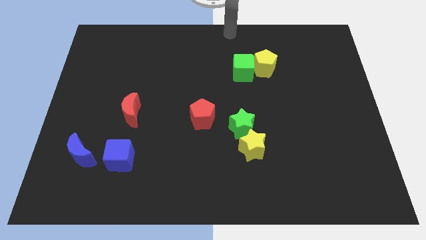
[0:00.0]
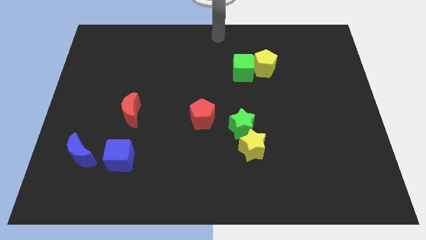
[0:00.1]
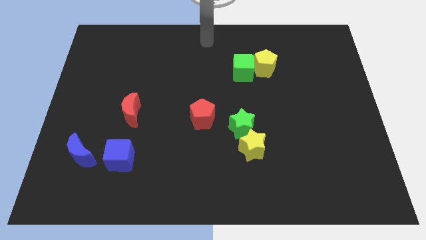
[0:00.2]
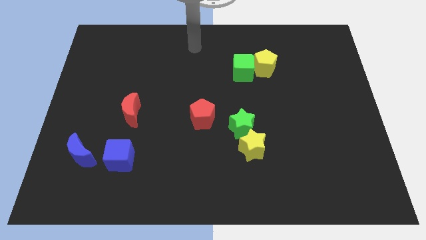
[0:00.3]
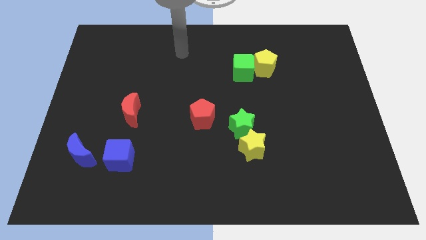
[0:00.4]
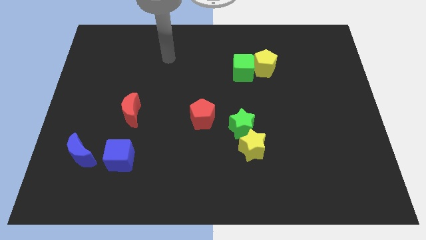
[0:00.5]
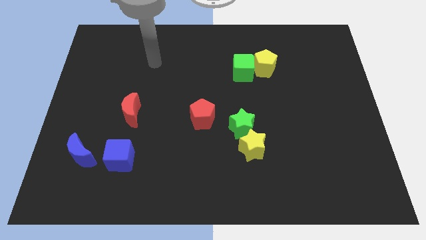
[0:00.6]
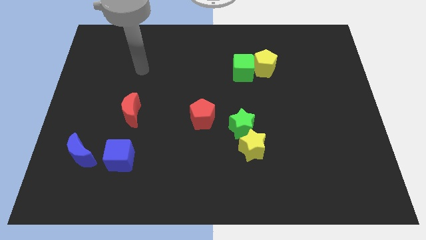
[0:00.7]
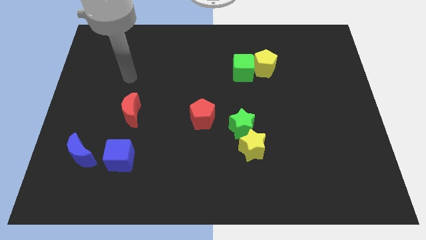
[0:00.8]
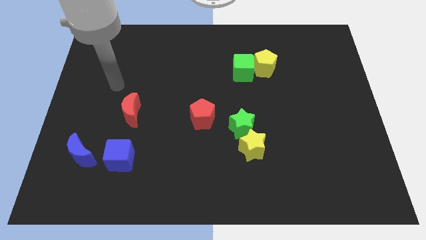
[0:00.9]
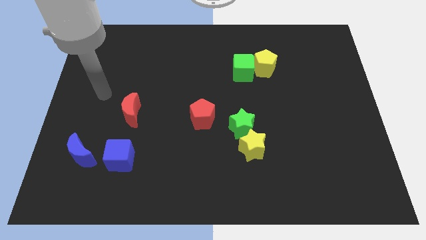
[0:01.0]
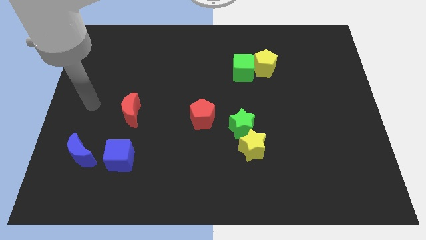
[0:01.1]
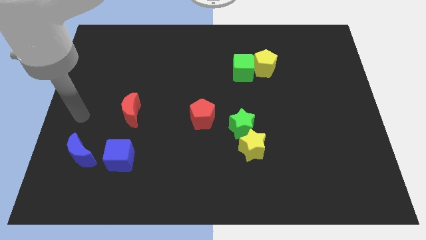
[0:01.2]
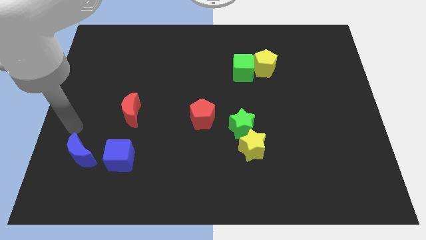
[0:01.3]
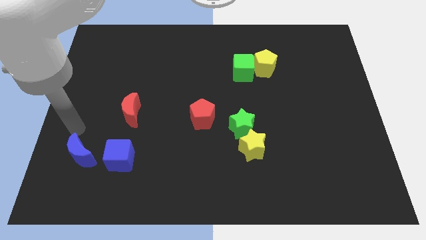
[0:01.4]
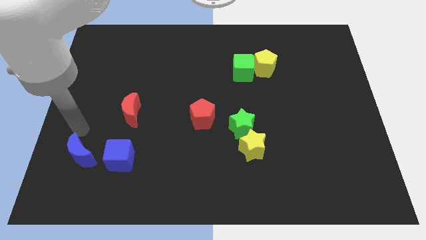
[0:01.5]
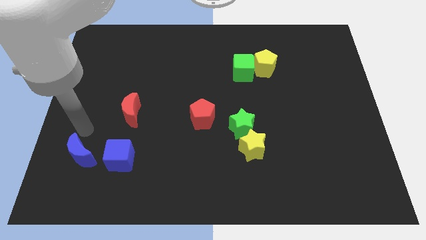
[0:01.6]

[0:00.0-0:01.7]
move your hand towards the blue moon

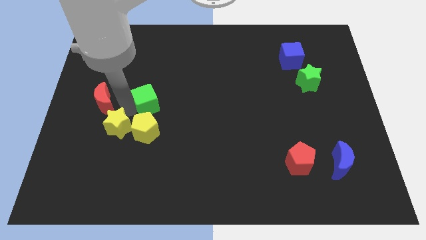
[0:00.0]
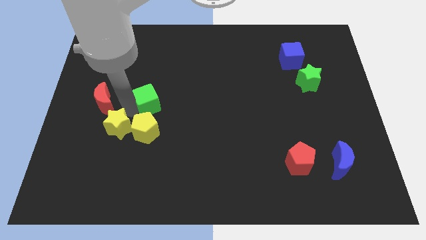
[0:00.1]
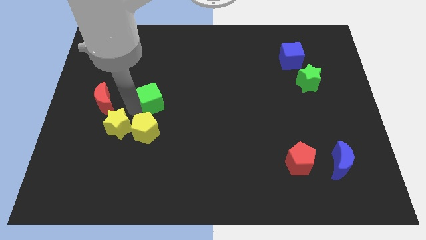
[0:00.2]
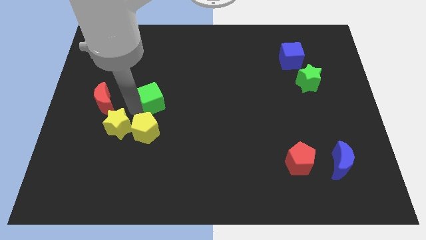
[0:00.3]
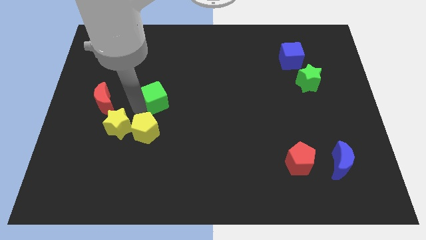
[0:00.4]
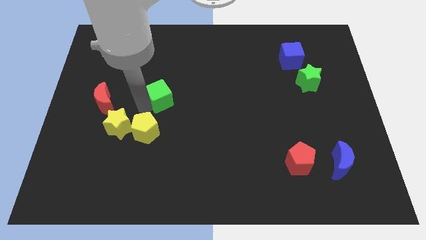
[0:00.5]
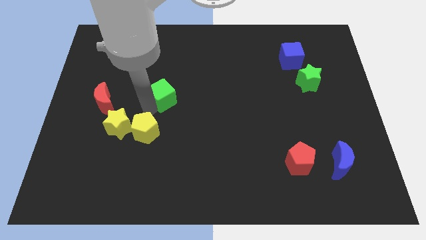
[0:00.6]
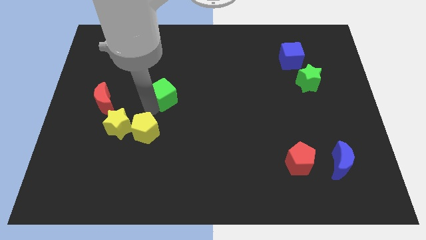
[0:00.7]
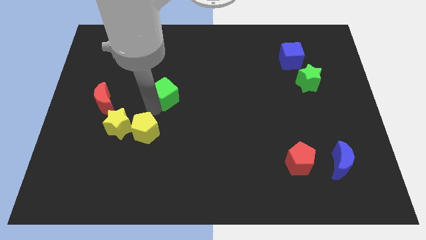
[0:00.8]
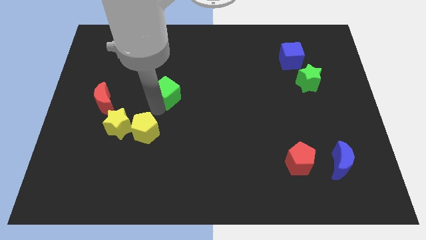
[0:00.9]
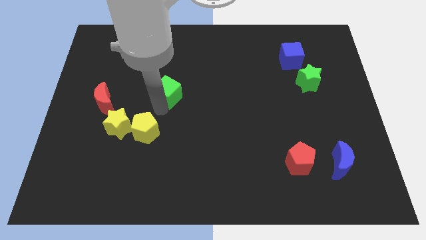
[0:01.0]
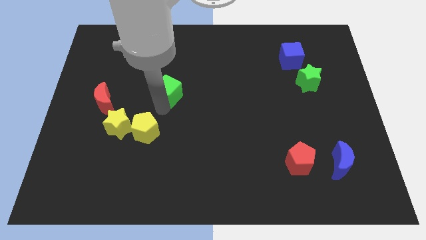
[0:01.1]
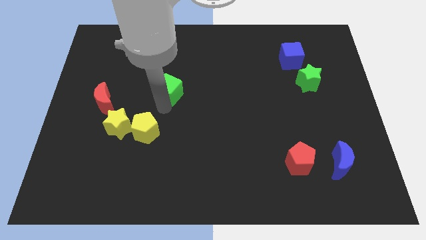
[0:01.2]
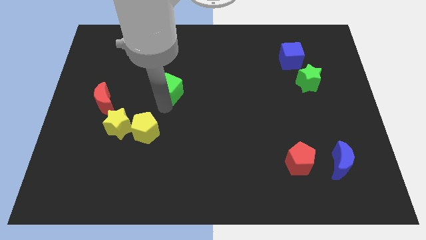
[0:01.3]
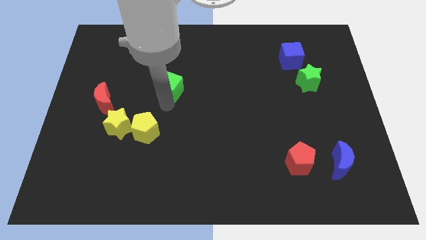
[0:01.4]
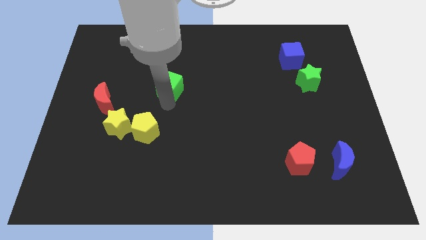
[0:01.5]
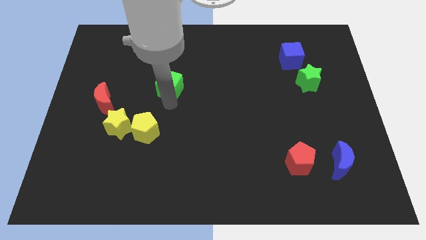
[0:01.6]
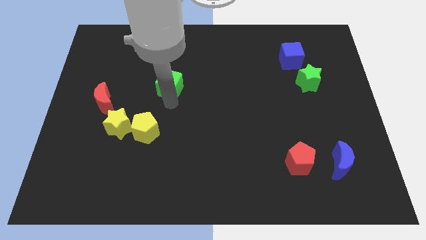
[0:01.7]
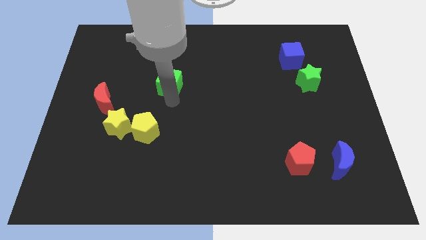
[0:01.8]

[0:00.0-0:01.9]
move the green cube to the top center of the board

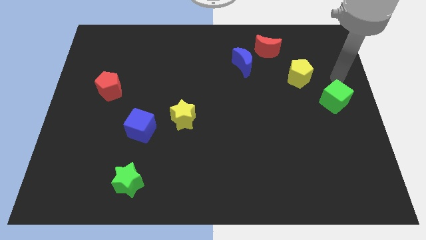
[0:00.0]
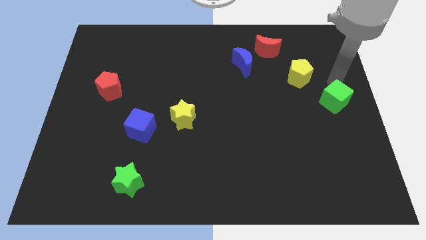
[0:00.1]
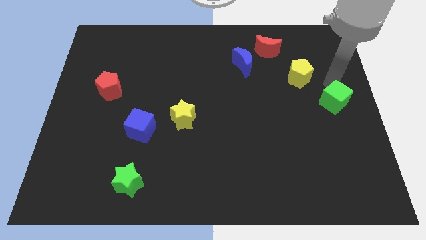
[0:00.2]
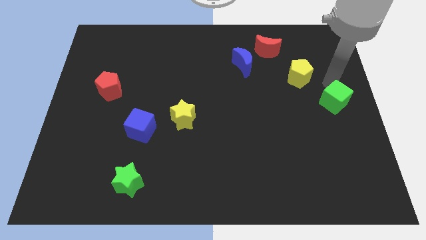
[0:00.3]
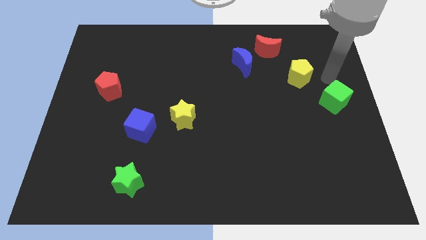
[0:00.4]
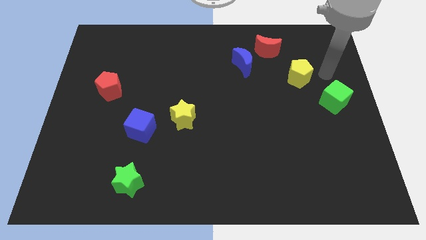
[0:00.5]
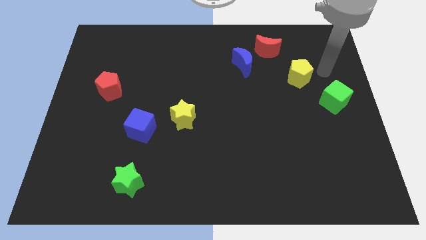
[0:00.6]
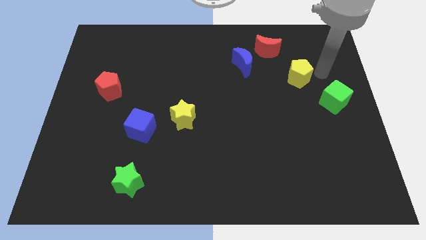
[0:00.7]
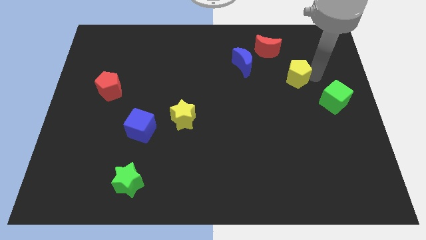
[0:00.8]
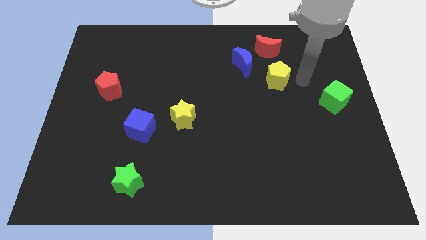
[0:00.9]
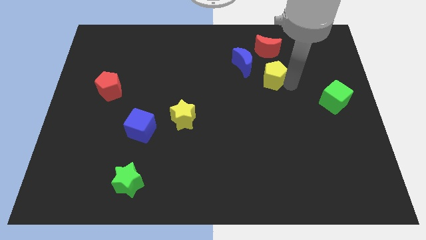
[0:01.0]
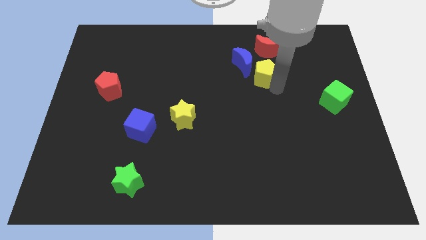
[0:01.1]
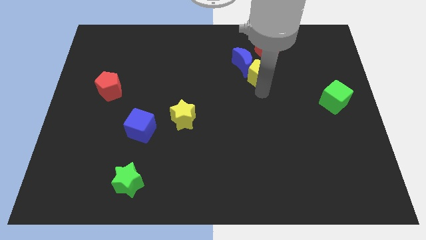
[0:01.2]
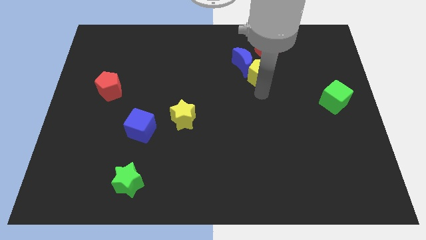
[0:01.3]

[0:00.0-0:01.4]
place yellow pentagon to the bottom of the red moon

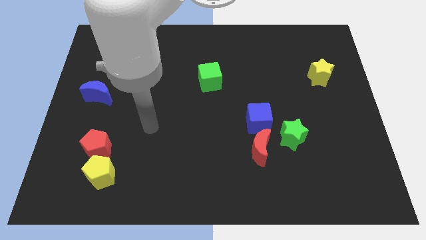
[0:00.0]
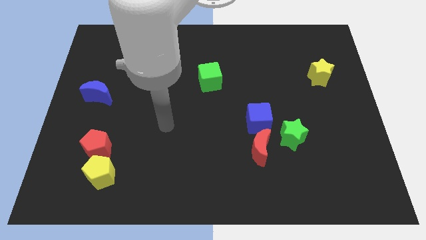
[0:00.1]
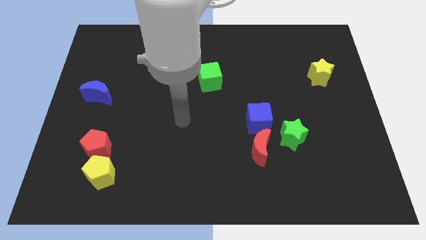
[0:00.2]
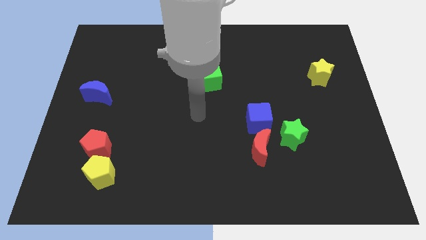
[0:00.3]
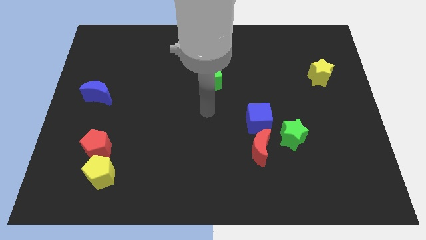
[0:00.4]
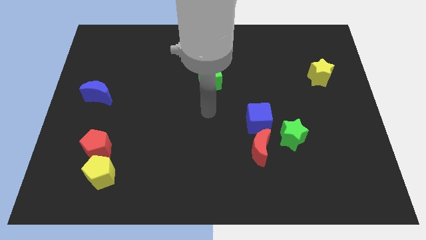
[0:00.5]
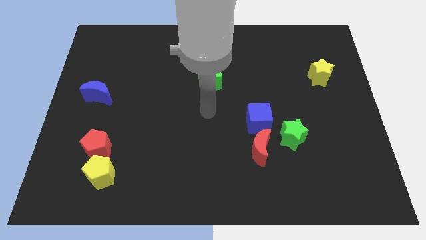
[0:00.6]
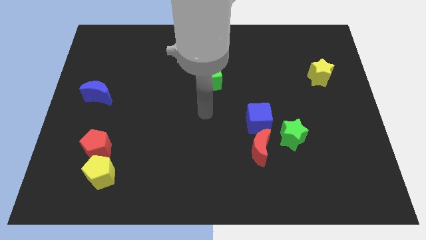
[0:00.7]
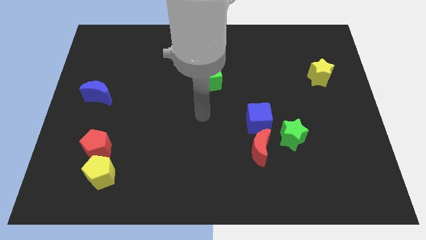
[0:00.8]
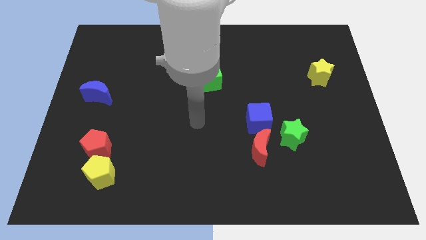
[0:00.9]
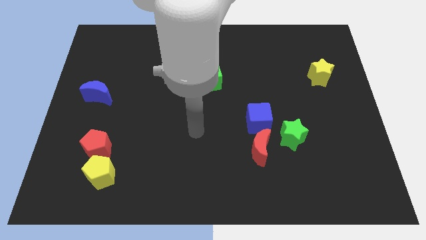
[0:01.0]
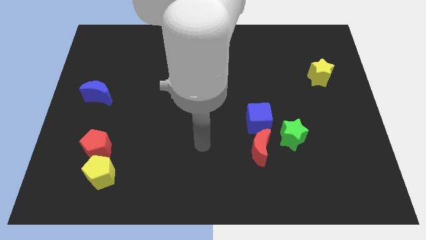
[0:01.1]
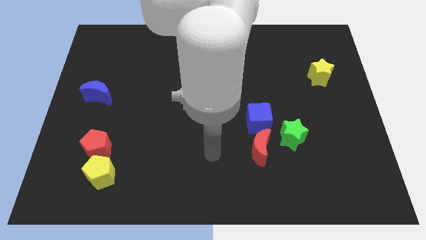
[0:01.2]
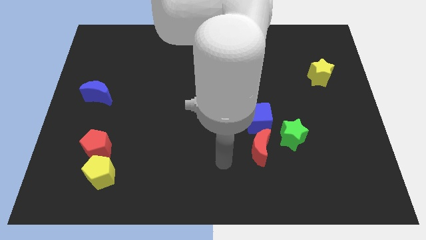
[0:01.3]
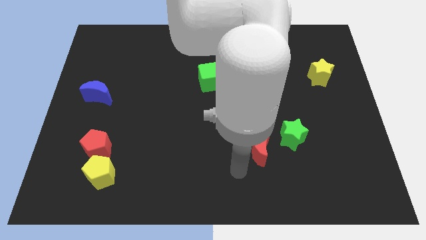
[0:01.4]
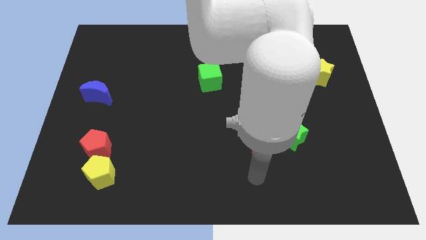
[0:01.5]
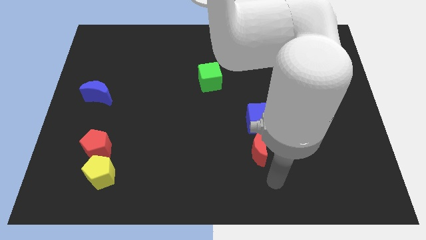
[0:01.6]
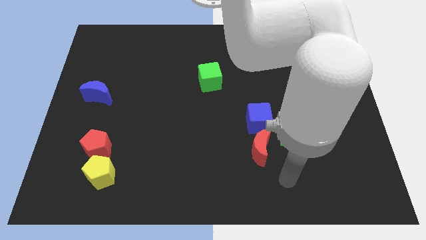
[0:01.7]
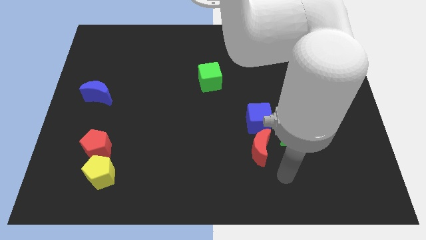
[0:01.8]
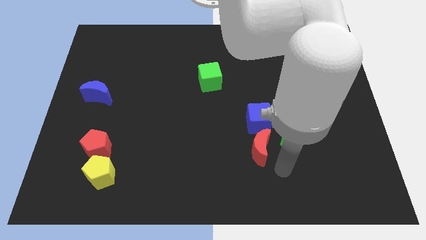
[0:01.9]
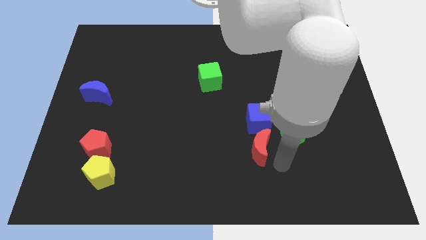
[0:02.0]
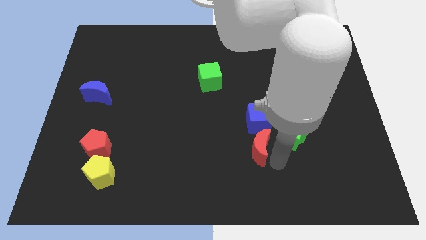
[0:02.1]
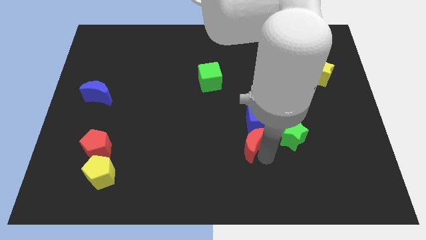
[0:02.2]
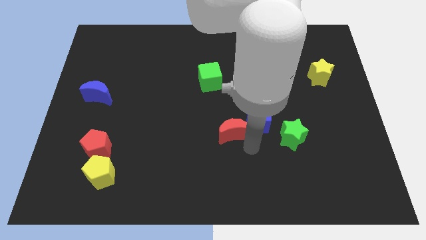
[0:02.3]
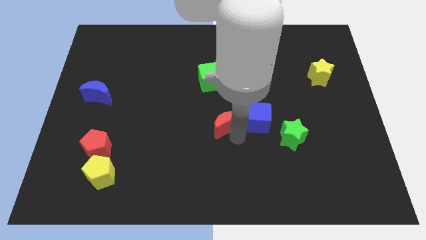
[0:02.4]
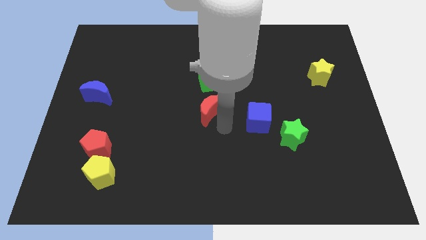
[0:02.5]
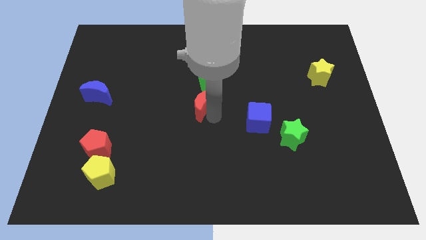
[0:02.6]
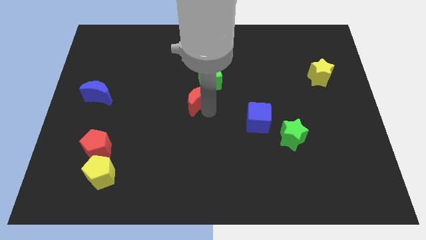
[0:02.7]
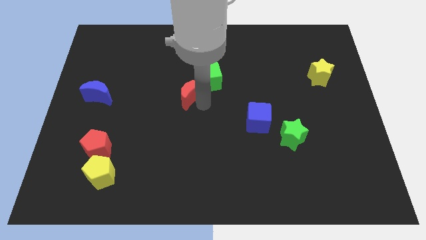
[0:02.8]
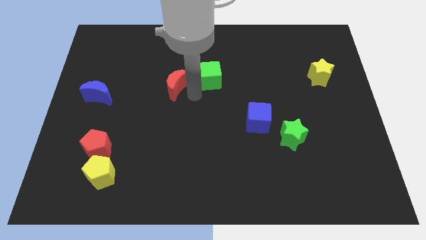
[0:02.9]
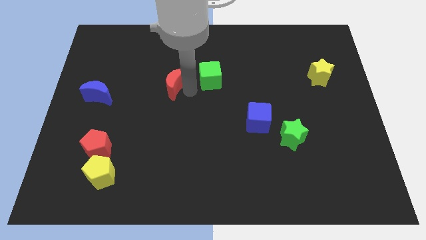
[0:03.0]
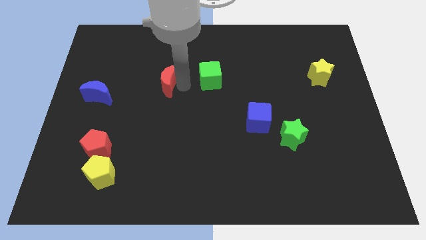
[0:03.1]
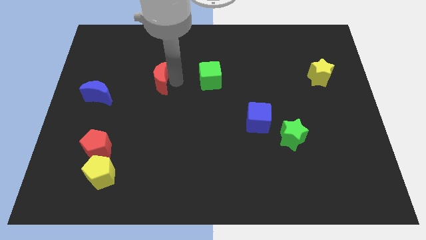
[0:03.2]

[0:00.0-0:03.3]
move the red crescent to the left of the green cube

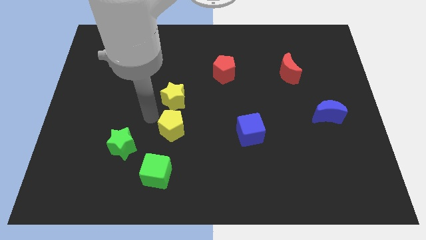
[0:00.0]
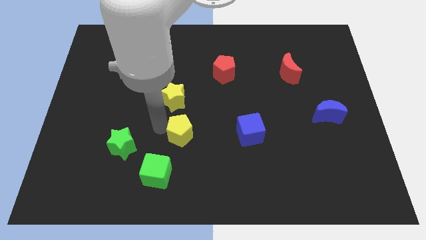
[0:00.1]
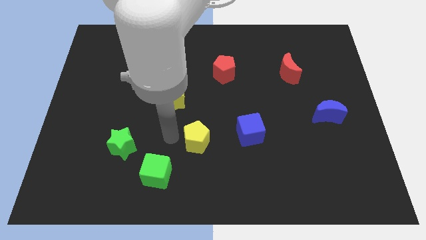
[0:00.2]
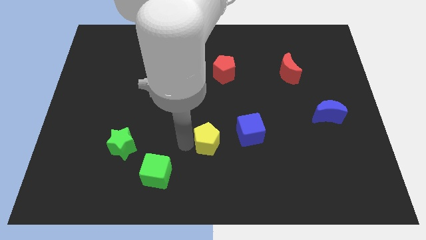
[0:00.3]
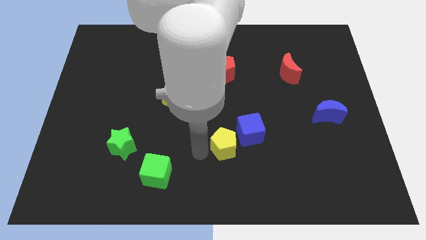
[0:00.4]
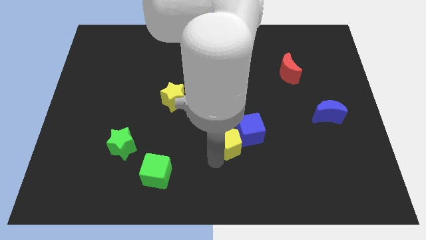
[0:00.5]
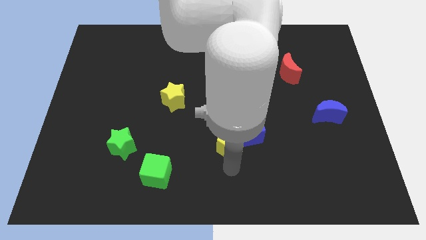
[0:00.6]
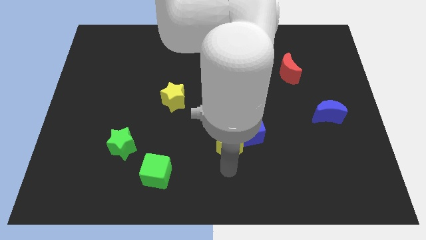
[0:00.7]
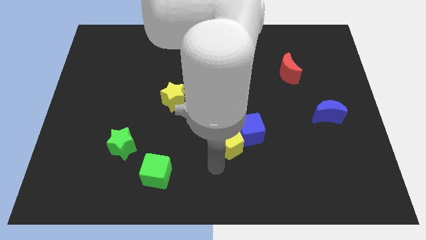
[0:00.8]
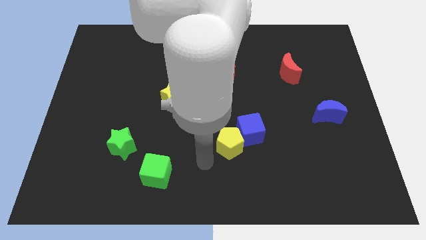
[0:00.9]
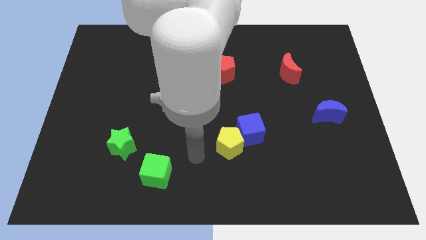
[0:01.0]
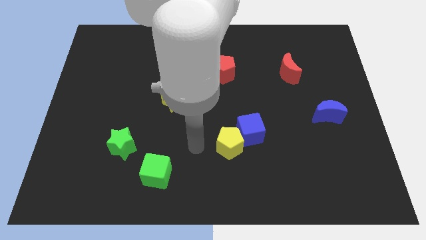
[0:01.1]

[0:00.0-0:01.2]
push the yellow pentagon to the left of the blue cube
